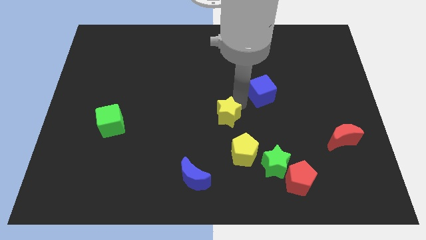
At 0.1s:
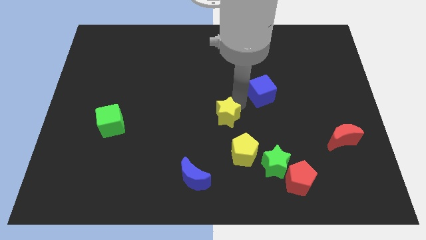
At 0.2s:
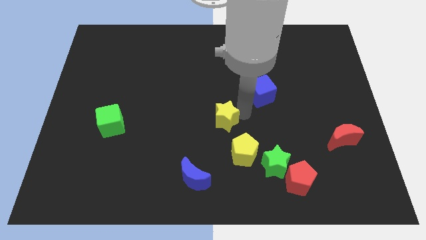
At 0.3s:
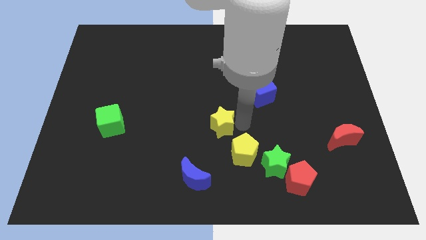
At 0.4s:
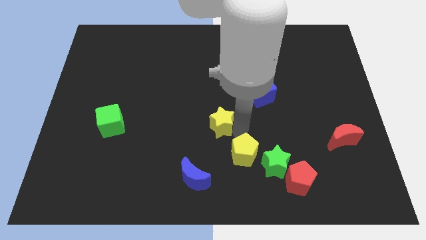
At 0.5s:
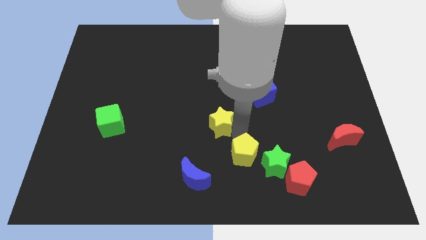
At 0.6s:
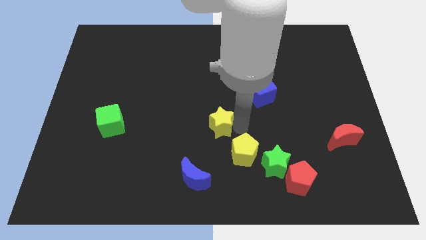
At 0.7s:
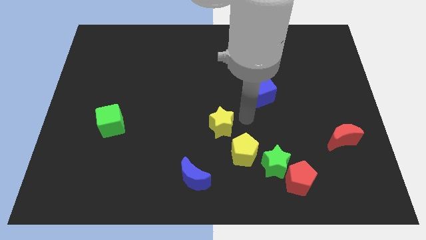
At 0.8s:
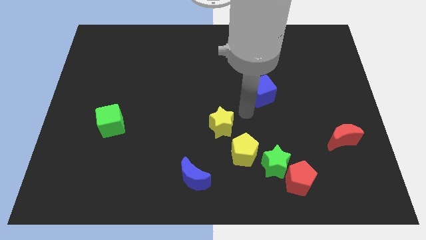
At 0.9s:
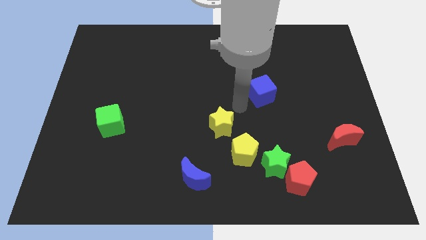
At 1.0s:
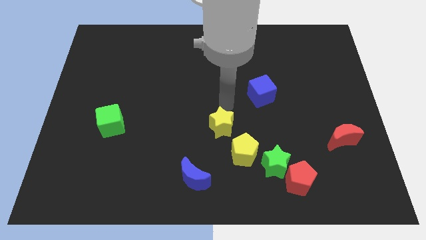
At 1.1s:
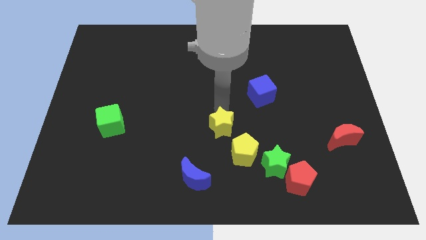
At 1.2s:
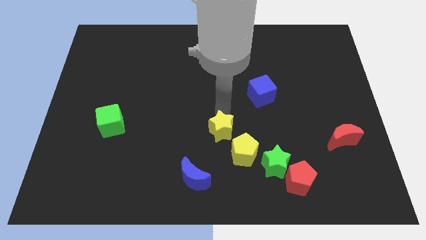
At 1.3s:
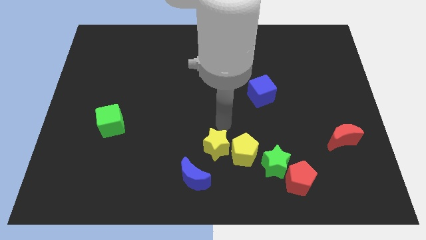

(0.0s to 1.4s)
push the yellow star to the left of the yellow penatgon

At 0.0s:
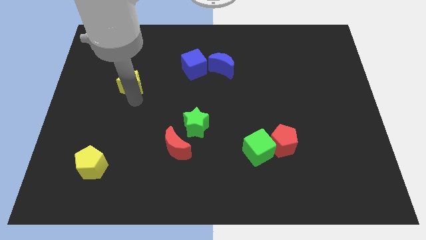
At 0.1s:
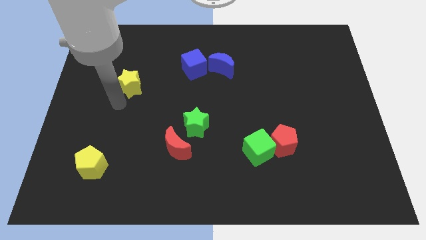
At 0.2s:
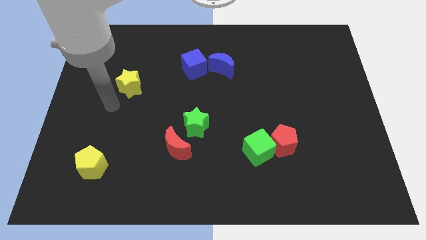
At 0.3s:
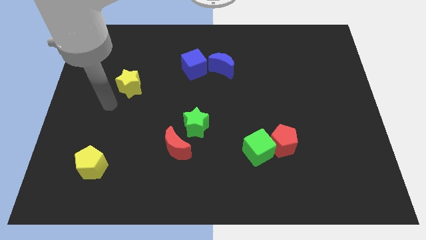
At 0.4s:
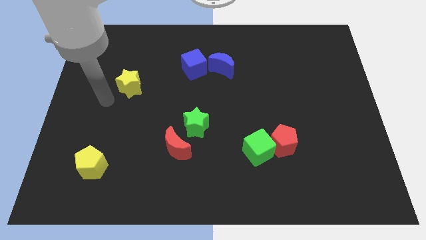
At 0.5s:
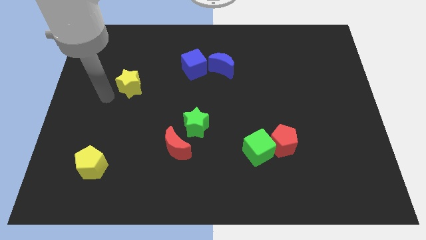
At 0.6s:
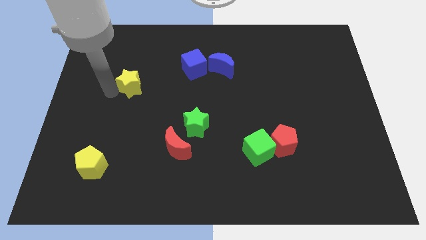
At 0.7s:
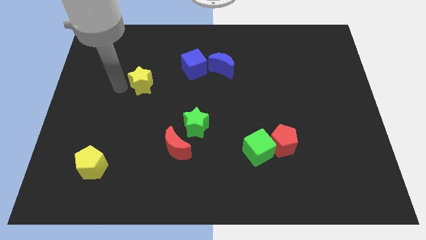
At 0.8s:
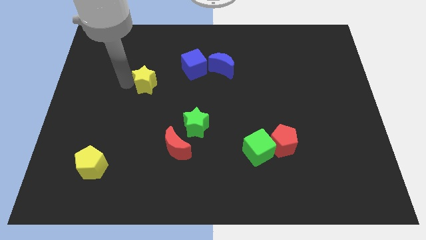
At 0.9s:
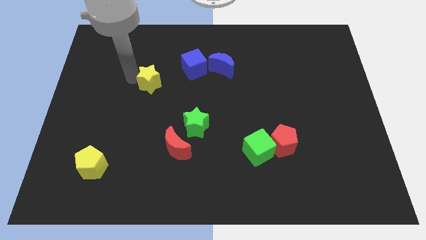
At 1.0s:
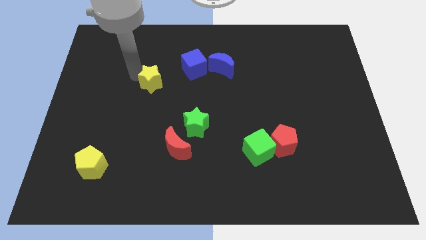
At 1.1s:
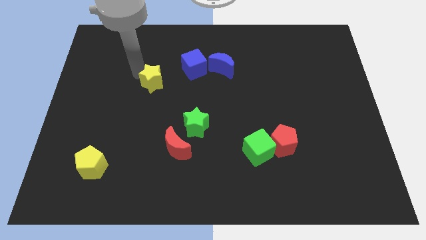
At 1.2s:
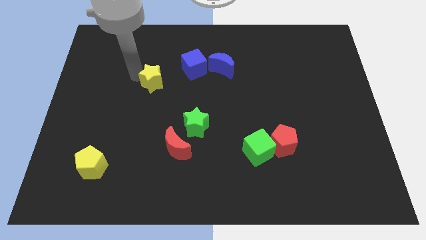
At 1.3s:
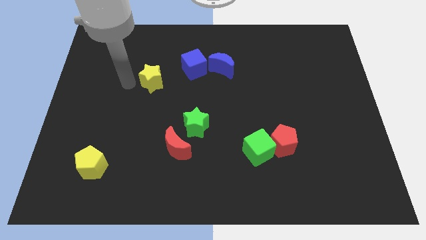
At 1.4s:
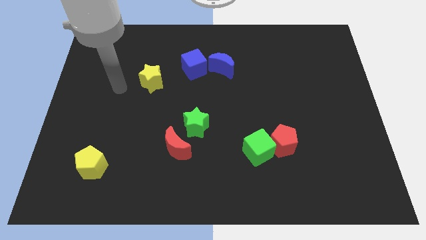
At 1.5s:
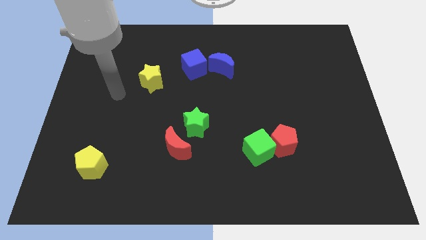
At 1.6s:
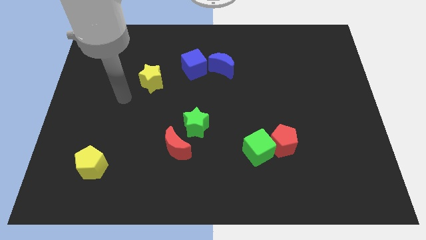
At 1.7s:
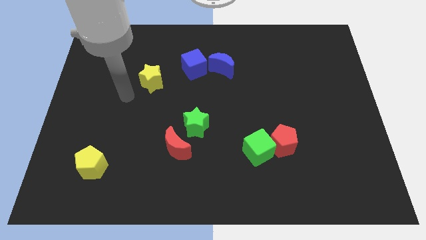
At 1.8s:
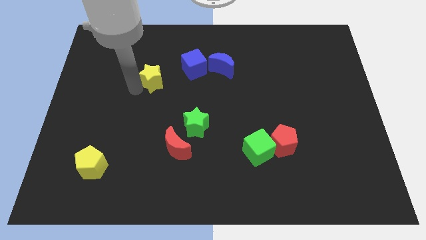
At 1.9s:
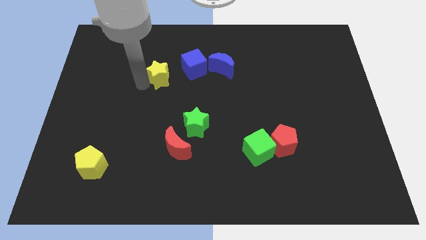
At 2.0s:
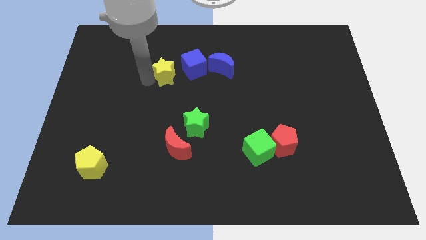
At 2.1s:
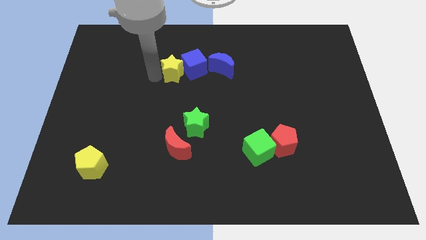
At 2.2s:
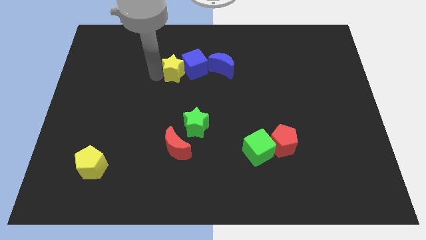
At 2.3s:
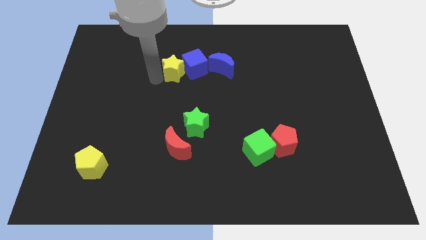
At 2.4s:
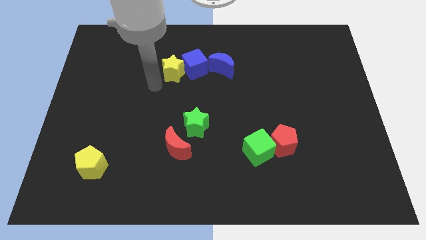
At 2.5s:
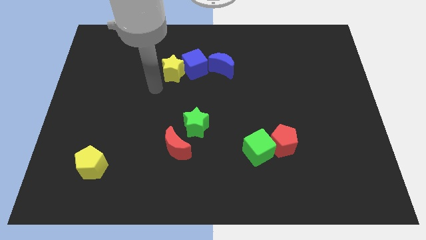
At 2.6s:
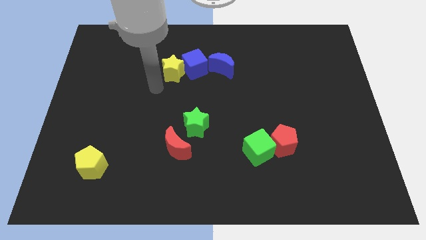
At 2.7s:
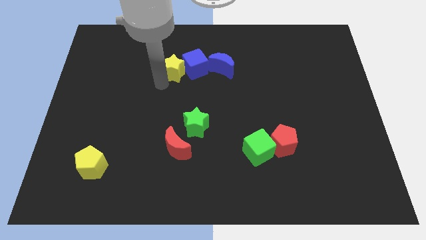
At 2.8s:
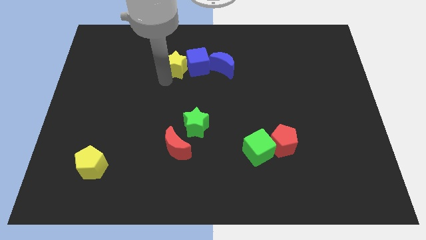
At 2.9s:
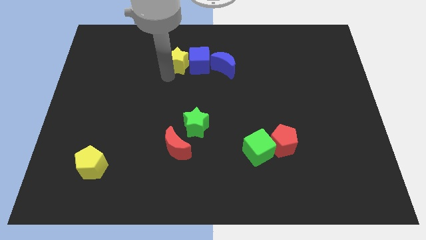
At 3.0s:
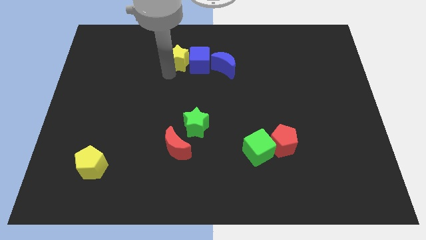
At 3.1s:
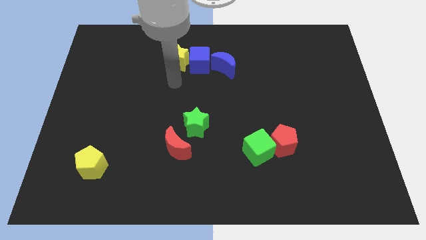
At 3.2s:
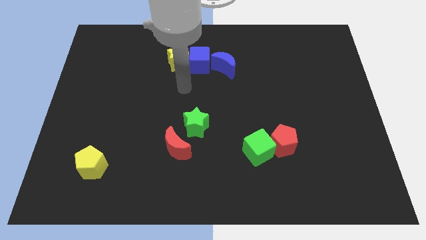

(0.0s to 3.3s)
slide the yellow star parallel to the left of blue cube

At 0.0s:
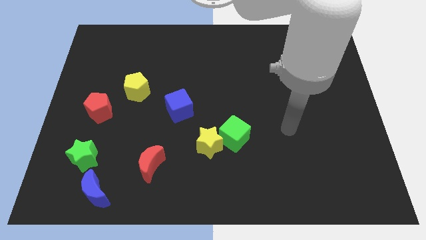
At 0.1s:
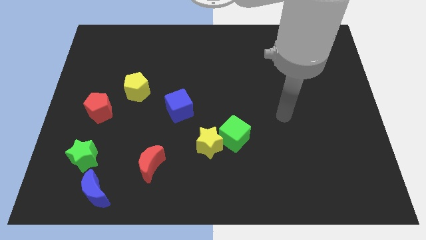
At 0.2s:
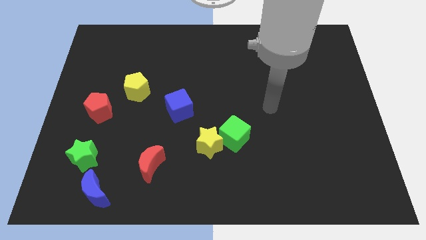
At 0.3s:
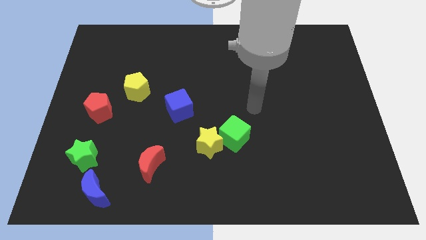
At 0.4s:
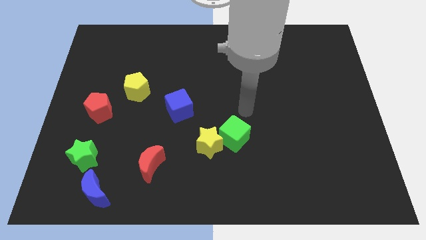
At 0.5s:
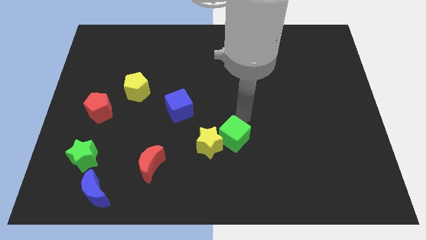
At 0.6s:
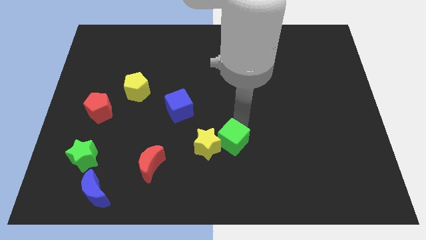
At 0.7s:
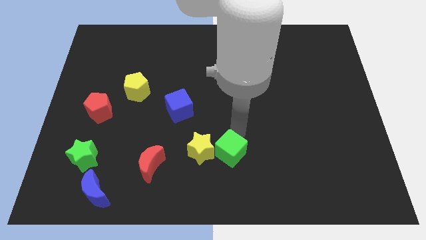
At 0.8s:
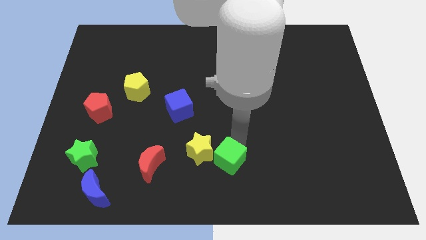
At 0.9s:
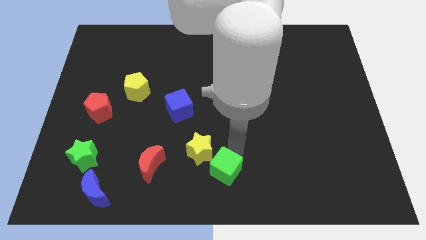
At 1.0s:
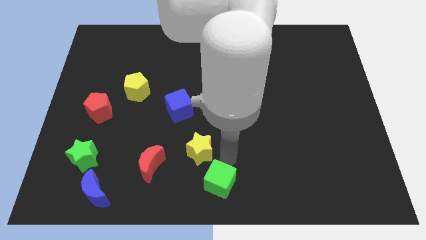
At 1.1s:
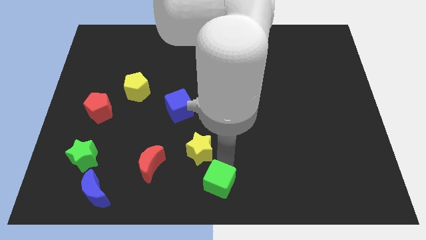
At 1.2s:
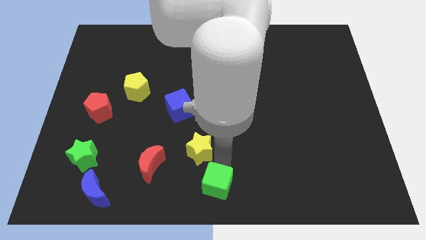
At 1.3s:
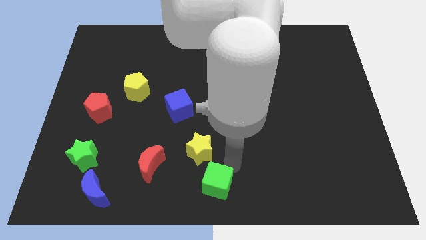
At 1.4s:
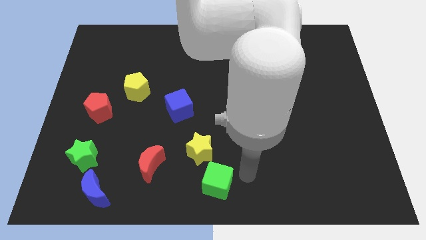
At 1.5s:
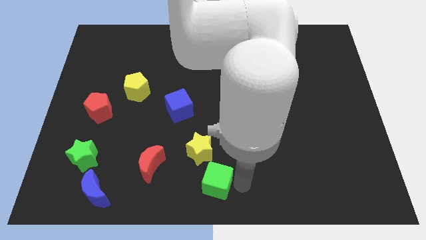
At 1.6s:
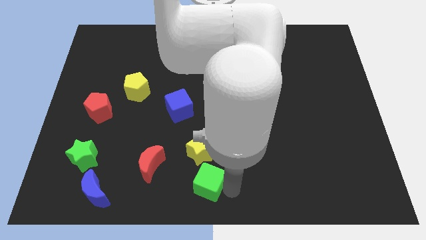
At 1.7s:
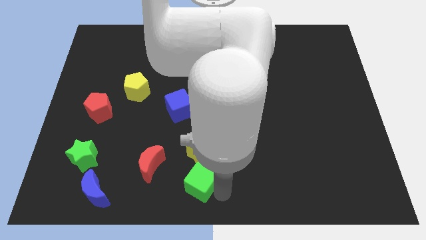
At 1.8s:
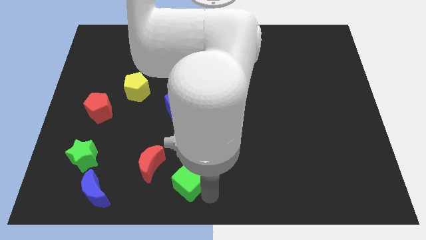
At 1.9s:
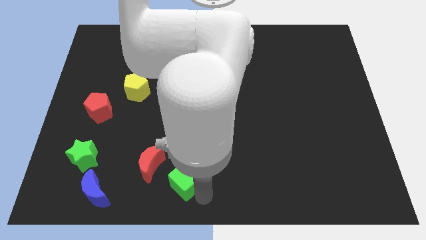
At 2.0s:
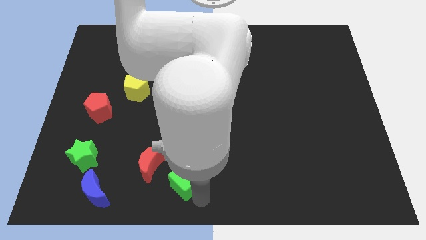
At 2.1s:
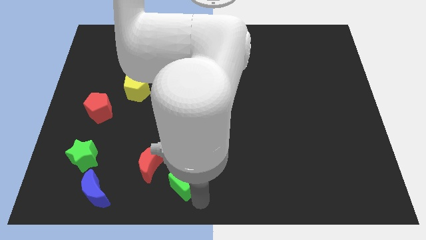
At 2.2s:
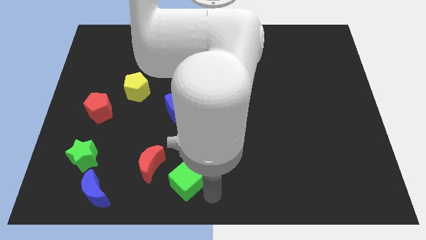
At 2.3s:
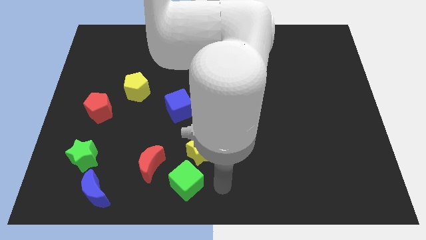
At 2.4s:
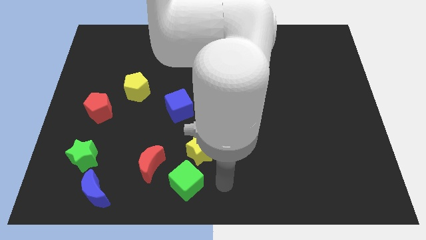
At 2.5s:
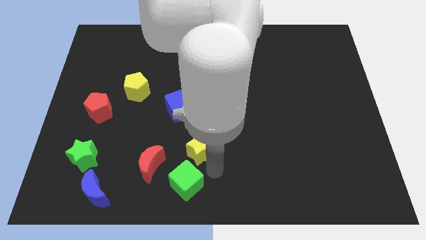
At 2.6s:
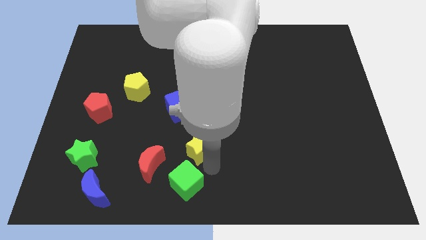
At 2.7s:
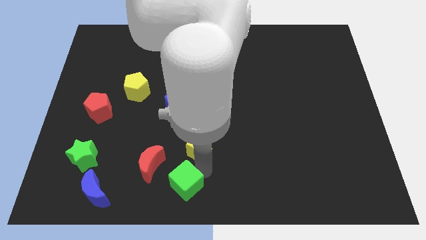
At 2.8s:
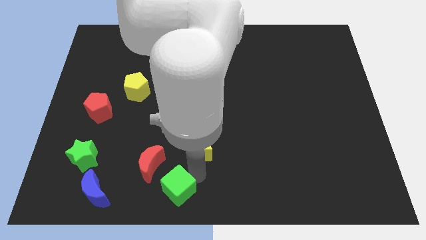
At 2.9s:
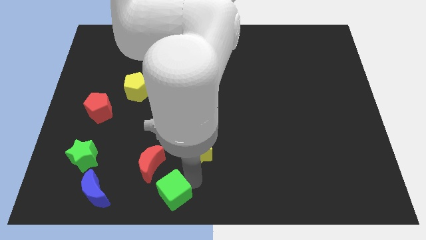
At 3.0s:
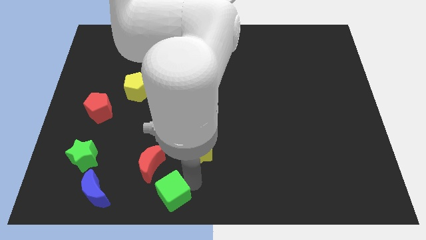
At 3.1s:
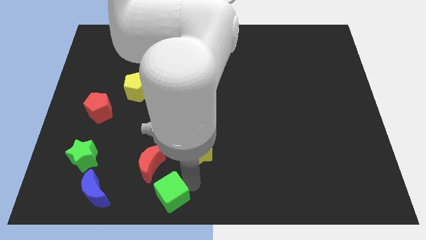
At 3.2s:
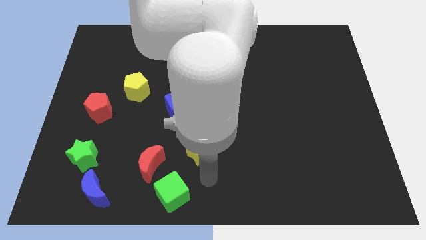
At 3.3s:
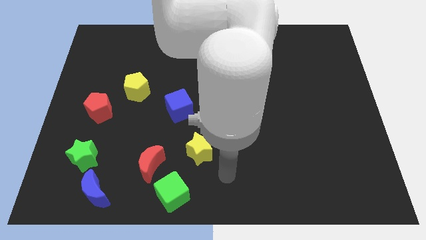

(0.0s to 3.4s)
move the green cube towards the bottom center of the board

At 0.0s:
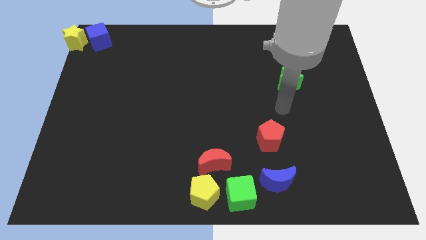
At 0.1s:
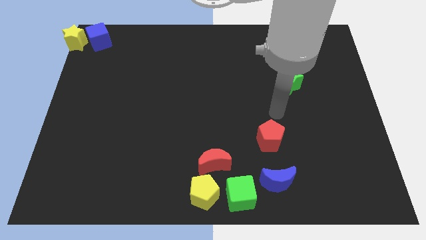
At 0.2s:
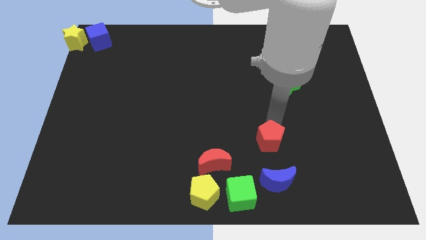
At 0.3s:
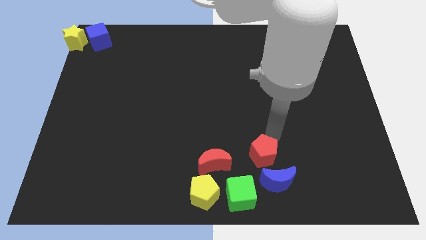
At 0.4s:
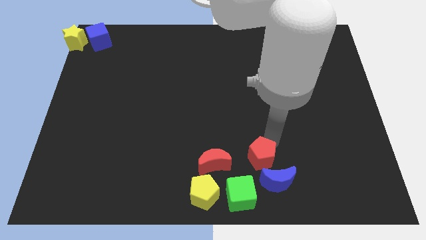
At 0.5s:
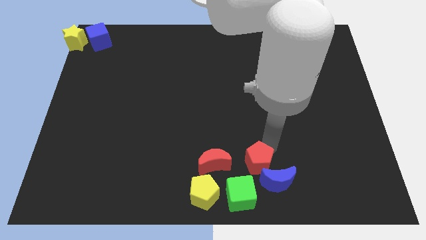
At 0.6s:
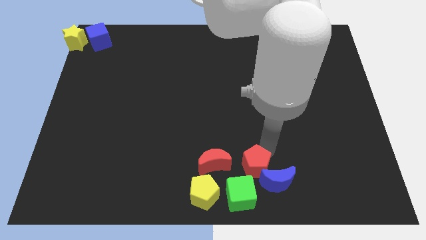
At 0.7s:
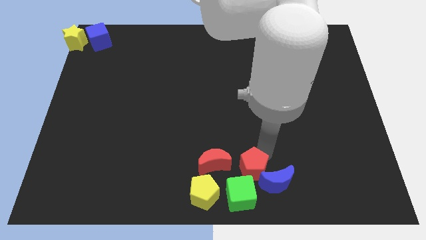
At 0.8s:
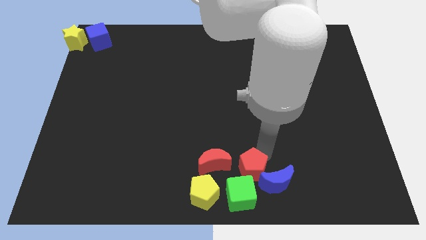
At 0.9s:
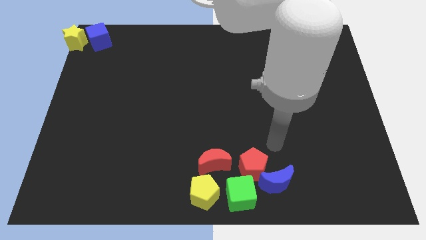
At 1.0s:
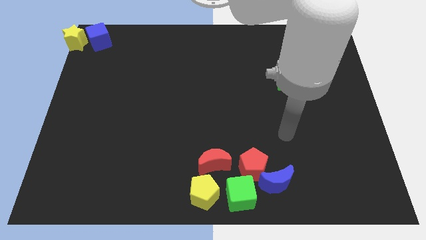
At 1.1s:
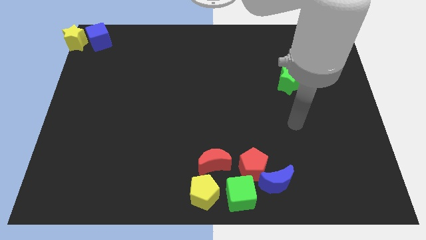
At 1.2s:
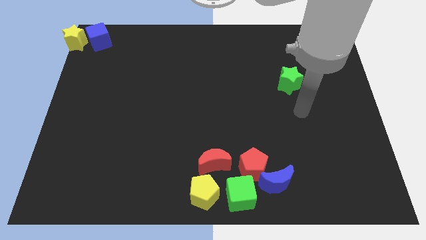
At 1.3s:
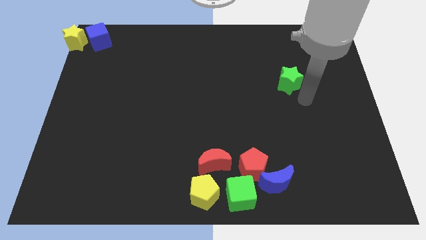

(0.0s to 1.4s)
place the red pentagon to the right of the red moon
